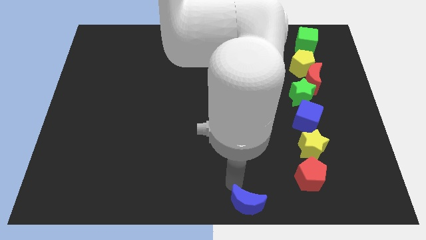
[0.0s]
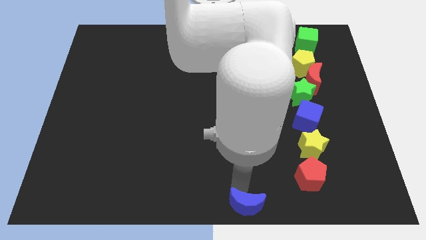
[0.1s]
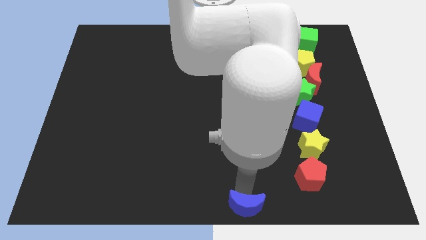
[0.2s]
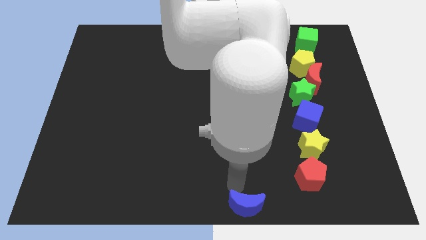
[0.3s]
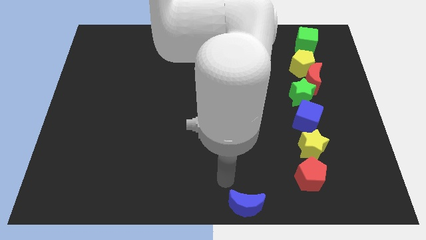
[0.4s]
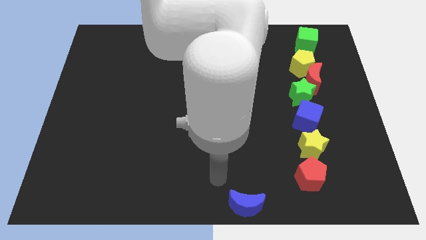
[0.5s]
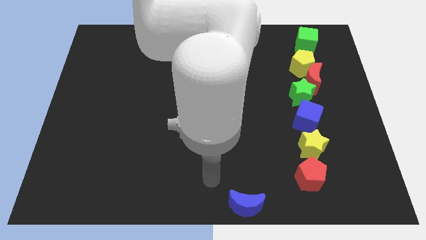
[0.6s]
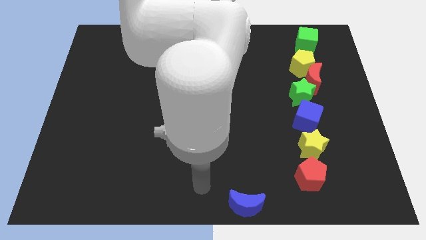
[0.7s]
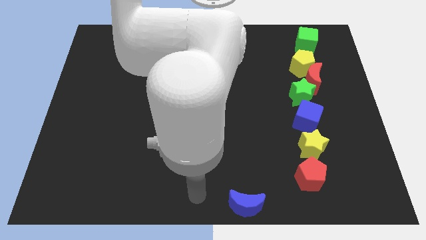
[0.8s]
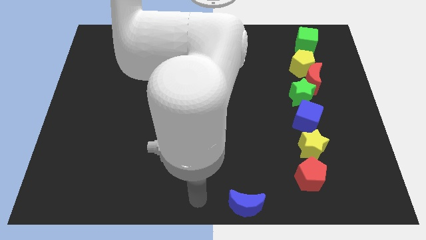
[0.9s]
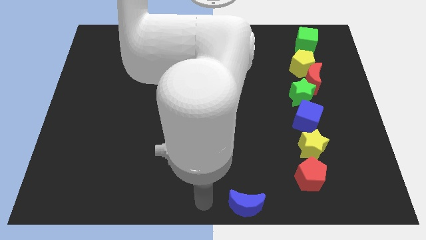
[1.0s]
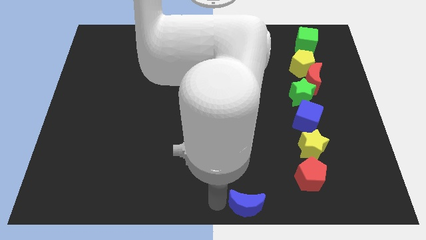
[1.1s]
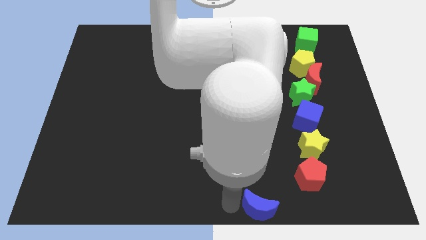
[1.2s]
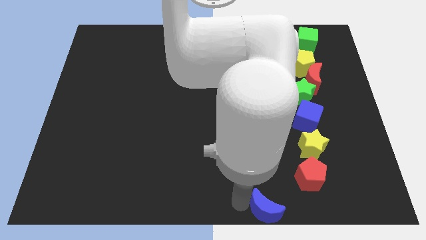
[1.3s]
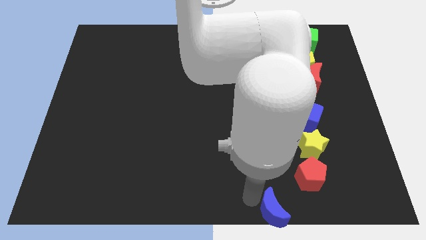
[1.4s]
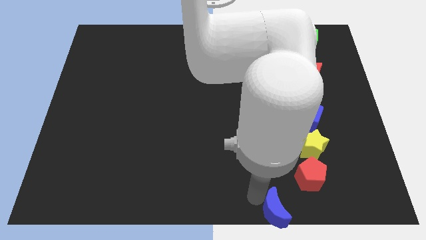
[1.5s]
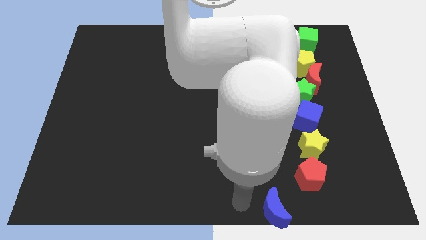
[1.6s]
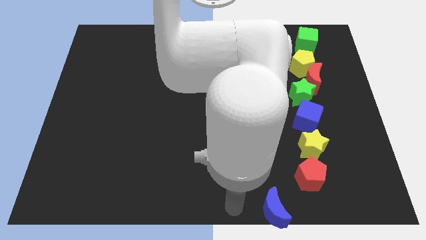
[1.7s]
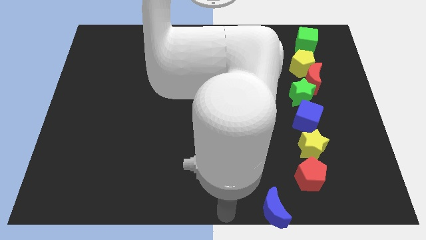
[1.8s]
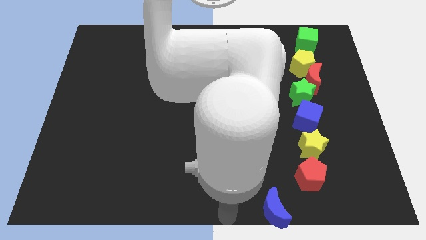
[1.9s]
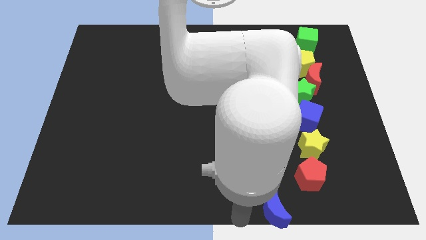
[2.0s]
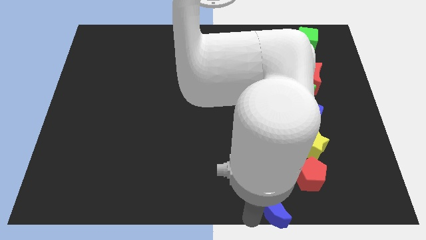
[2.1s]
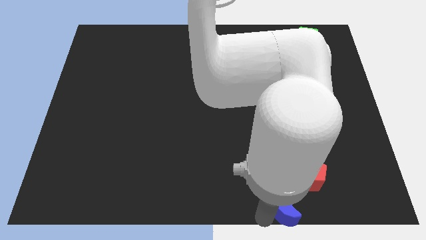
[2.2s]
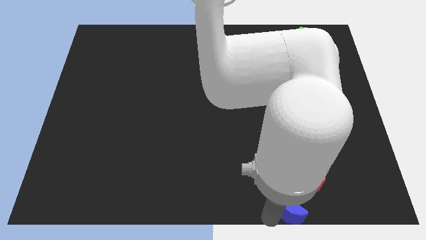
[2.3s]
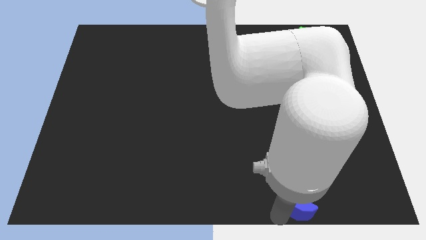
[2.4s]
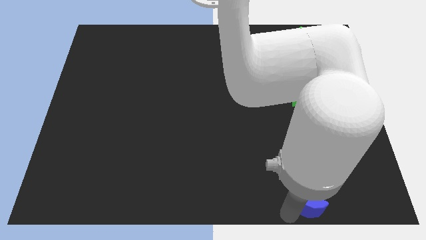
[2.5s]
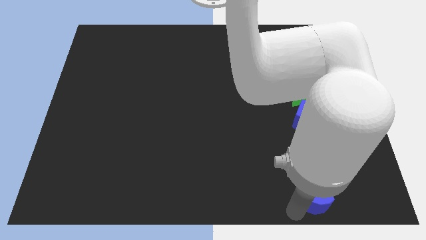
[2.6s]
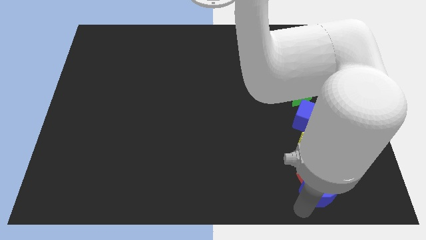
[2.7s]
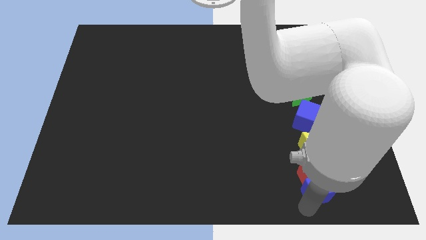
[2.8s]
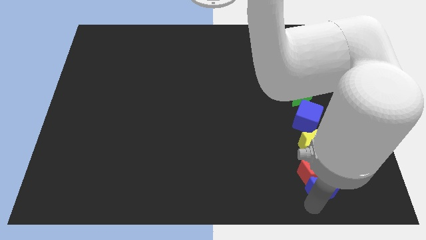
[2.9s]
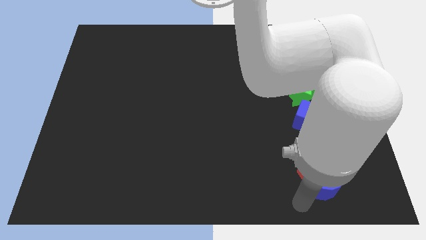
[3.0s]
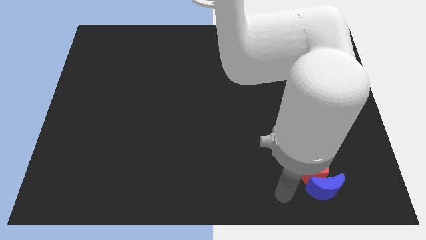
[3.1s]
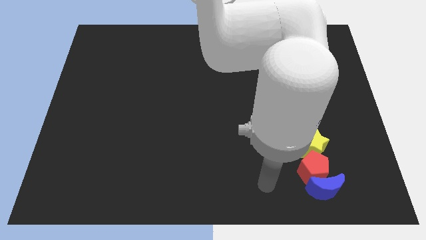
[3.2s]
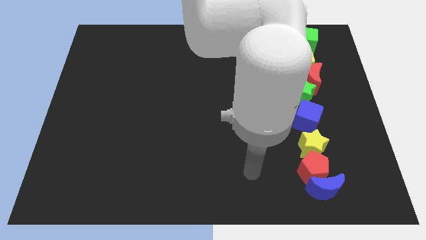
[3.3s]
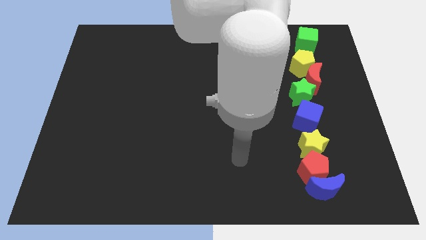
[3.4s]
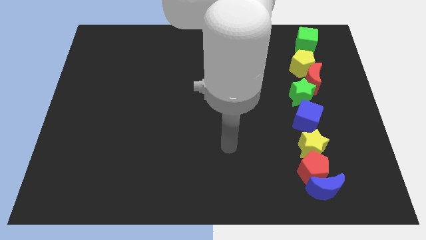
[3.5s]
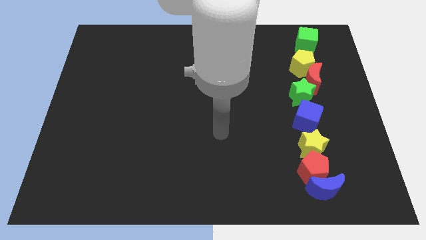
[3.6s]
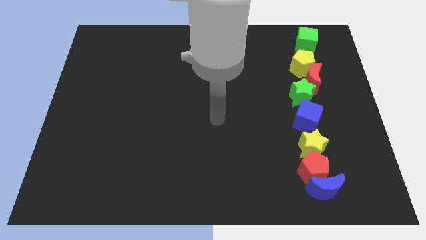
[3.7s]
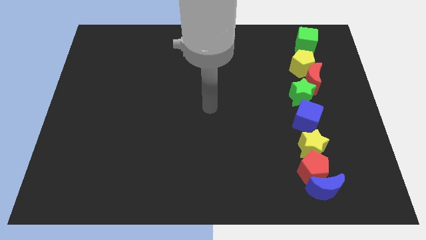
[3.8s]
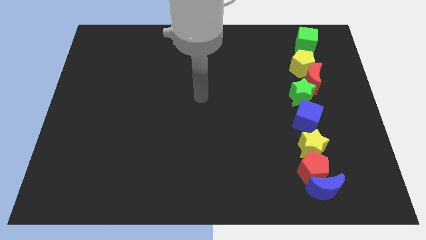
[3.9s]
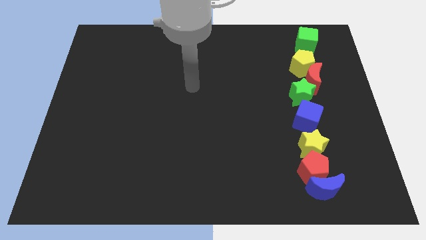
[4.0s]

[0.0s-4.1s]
move the blue moon to the bottom of the red pentagon

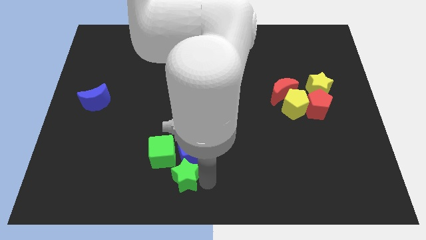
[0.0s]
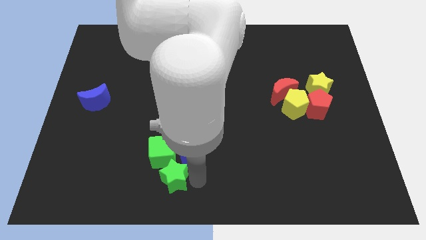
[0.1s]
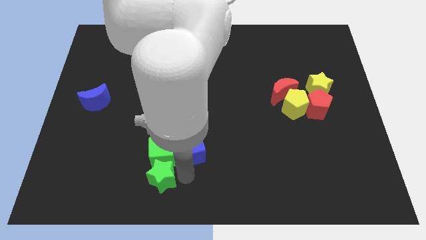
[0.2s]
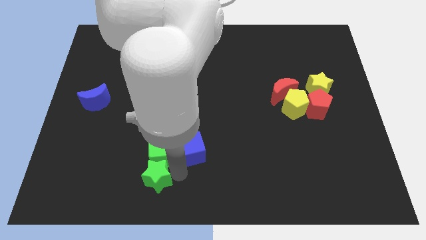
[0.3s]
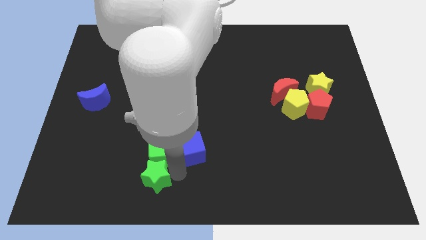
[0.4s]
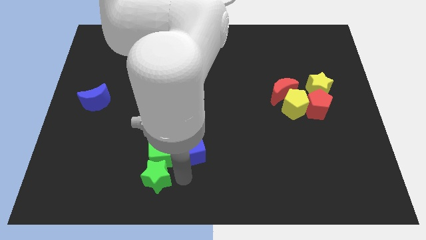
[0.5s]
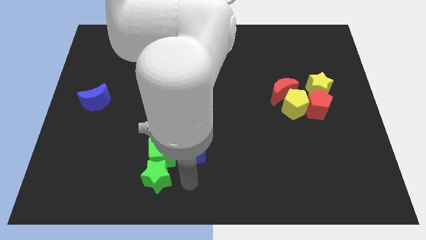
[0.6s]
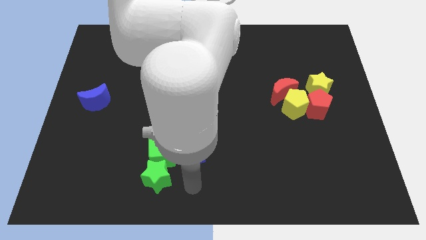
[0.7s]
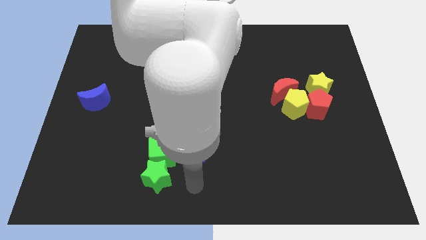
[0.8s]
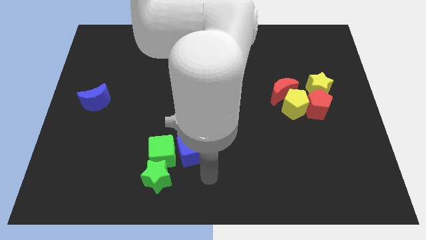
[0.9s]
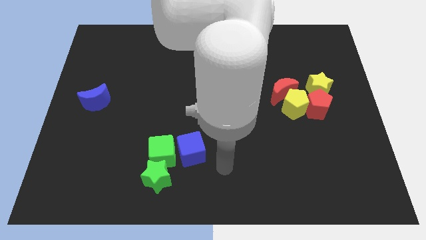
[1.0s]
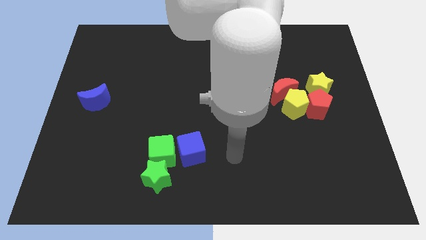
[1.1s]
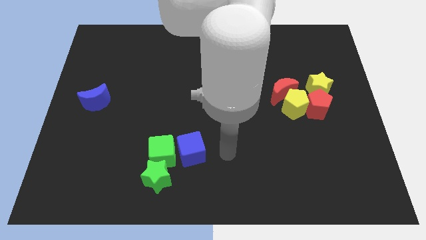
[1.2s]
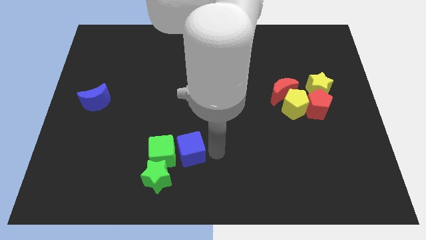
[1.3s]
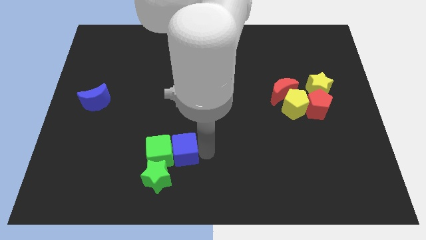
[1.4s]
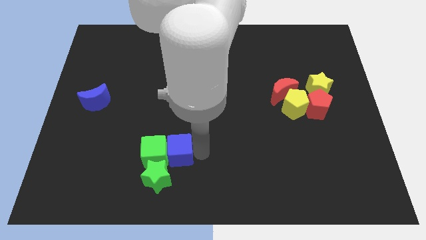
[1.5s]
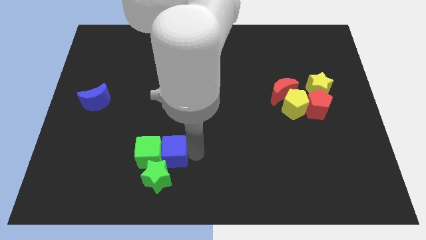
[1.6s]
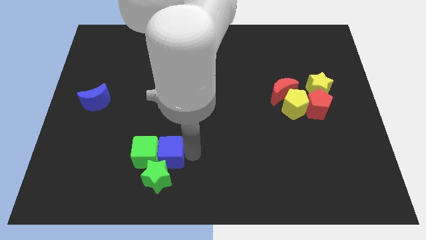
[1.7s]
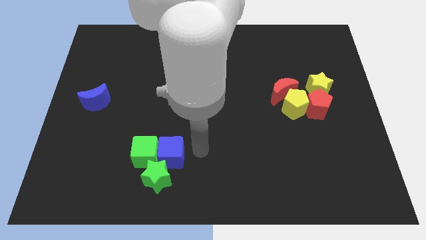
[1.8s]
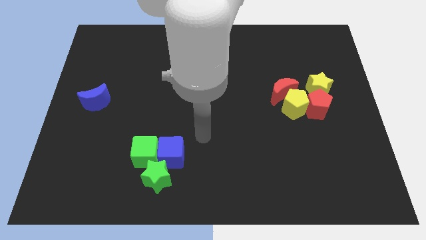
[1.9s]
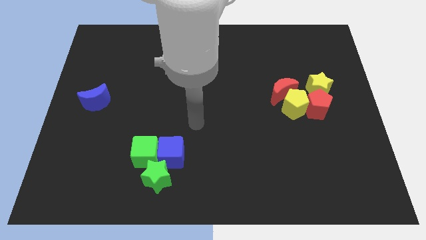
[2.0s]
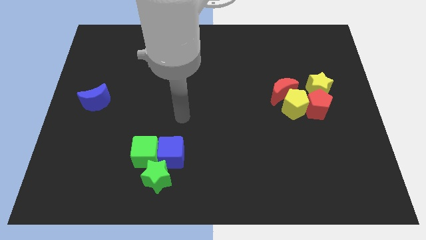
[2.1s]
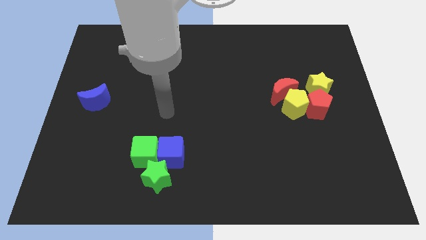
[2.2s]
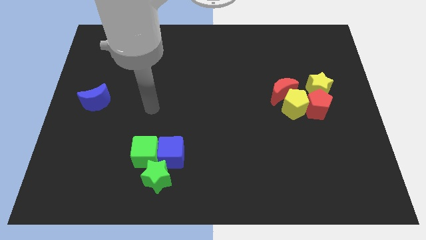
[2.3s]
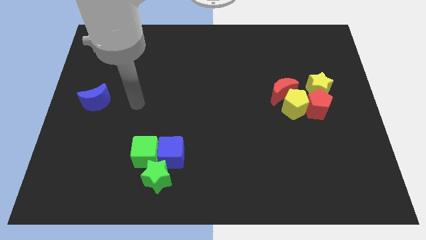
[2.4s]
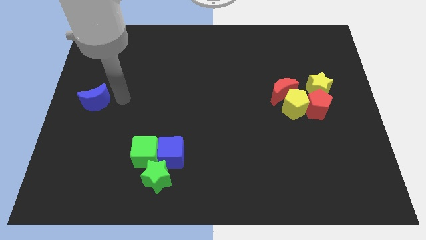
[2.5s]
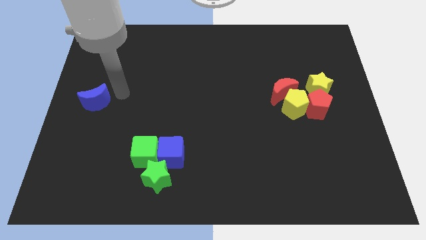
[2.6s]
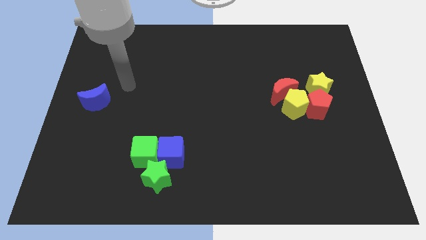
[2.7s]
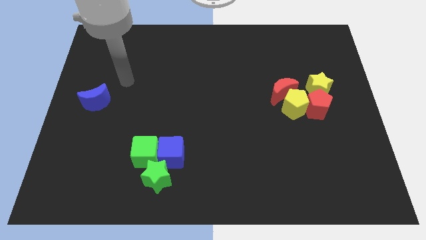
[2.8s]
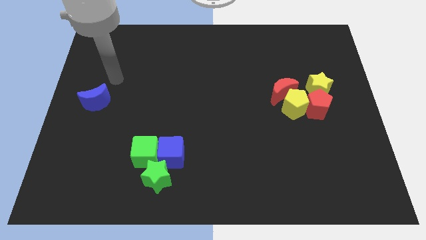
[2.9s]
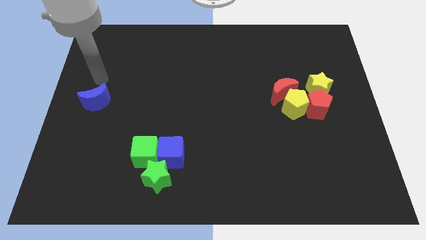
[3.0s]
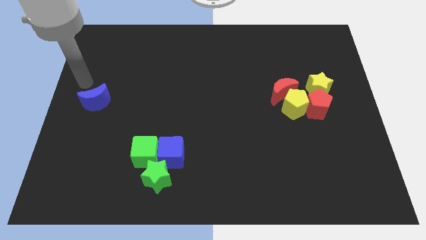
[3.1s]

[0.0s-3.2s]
move the blue cube into green cube

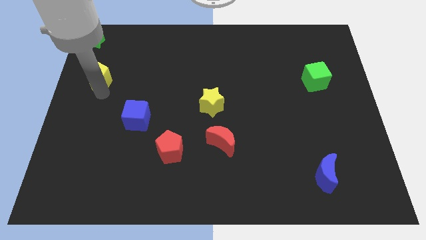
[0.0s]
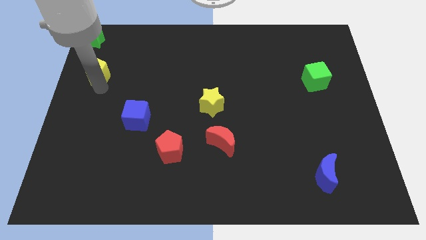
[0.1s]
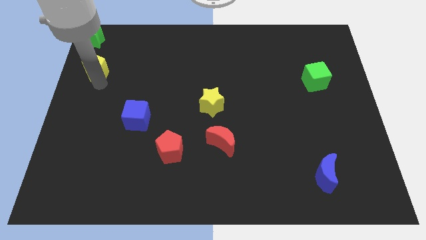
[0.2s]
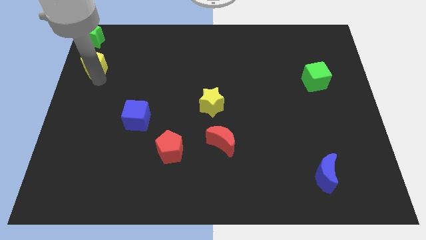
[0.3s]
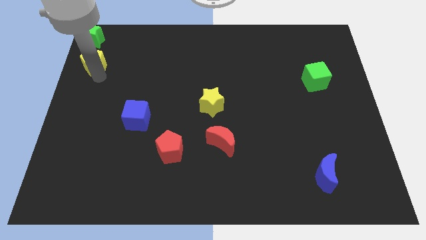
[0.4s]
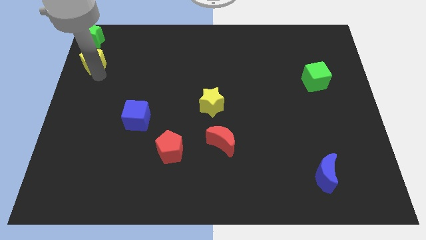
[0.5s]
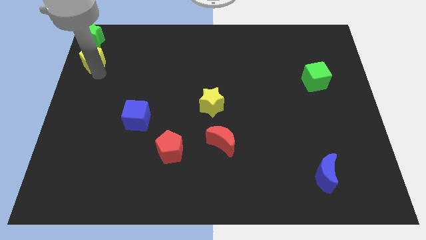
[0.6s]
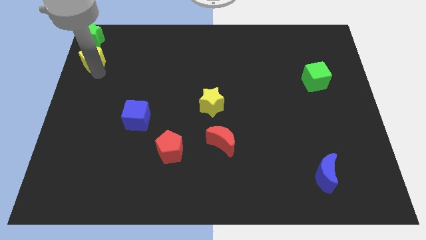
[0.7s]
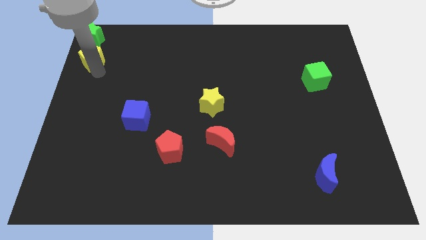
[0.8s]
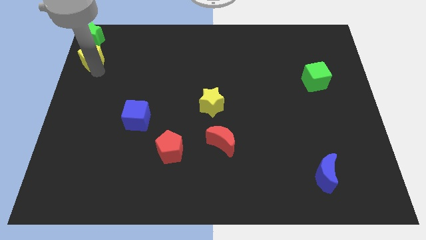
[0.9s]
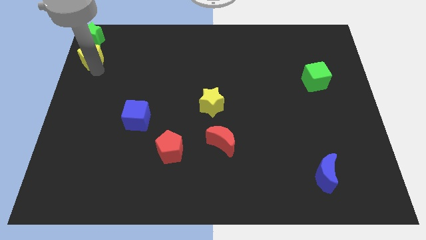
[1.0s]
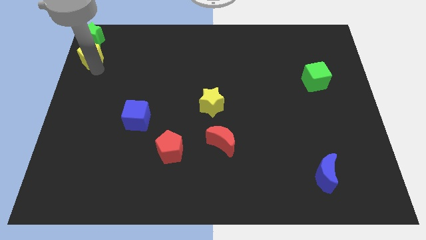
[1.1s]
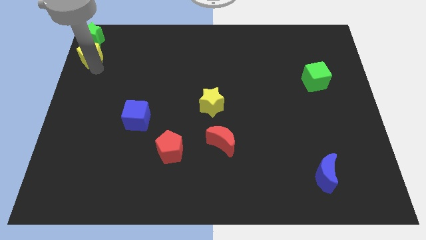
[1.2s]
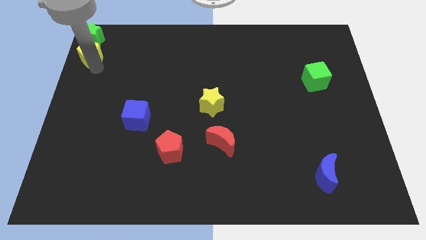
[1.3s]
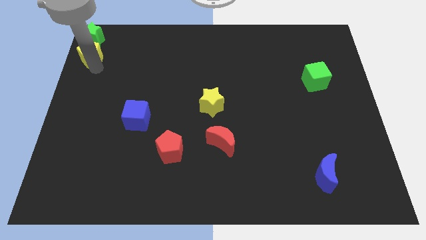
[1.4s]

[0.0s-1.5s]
place the yellow pentagon into green star
